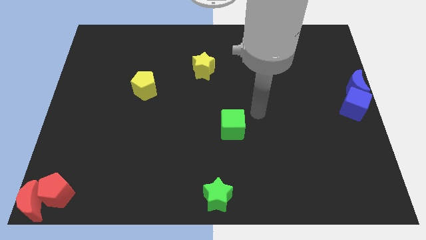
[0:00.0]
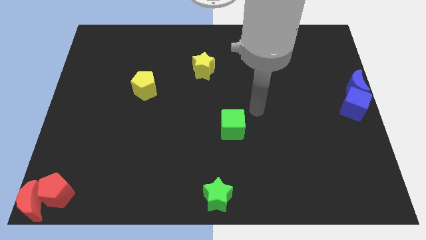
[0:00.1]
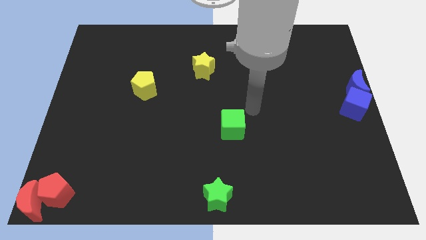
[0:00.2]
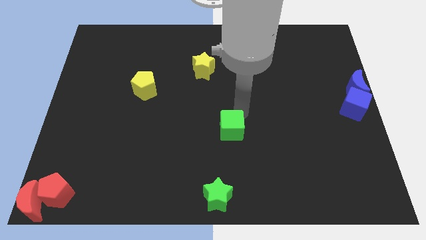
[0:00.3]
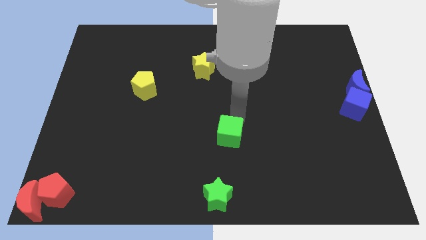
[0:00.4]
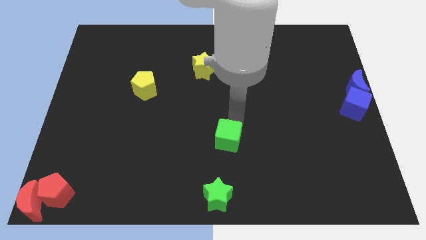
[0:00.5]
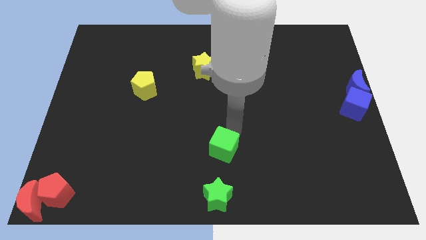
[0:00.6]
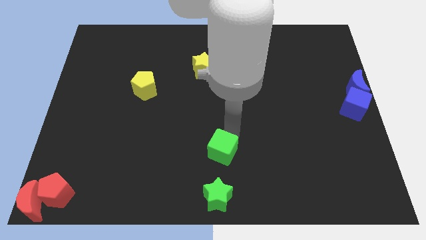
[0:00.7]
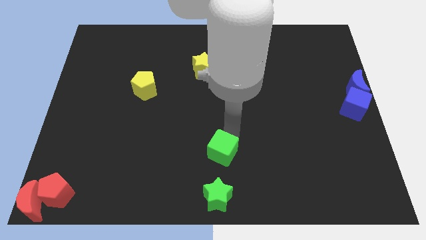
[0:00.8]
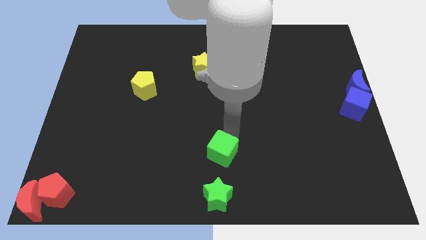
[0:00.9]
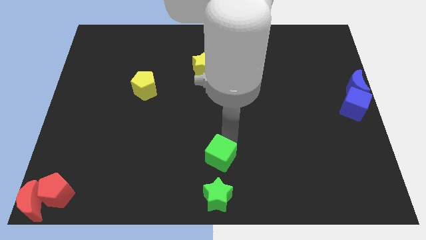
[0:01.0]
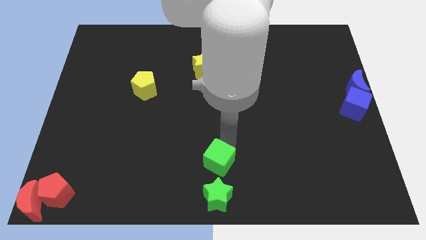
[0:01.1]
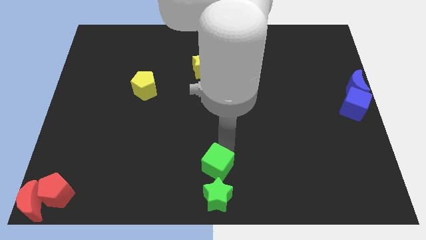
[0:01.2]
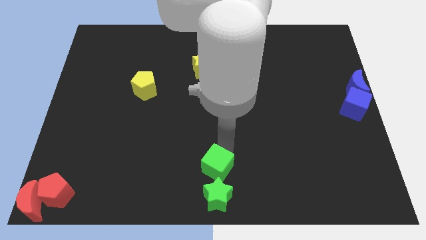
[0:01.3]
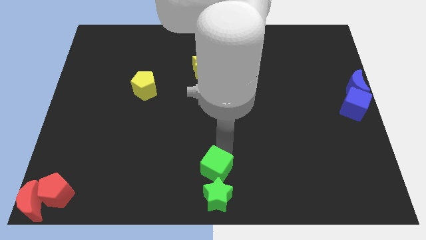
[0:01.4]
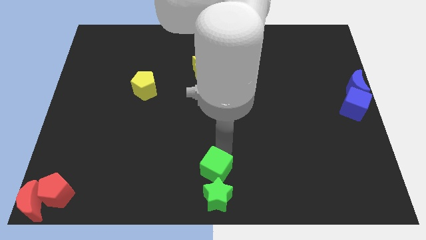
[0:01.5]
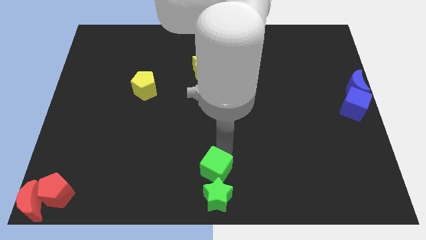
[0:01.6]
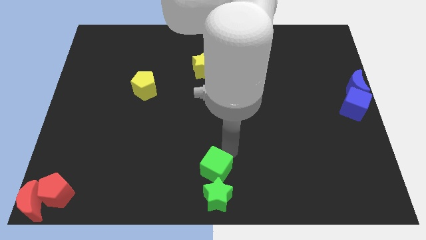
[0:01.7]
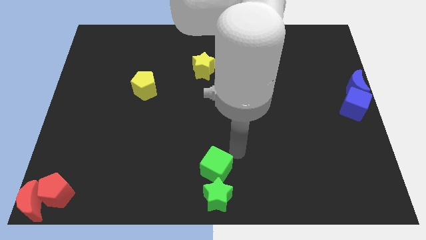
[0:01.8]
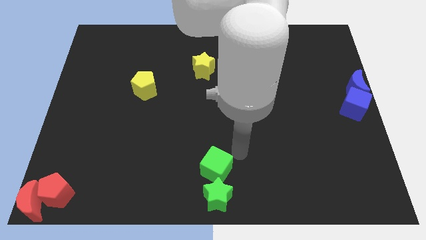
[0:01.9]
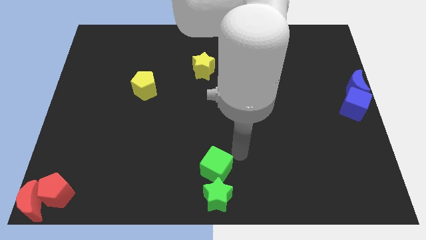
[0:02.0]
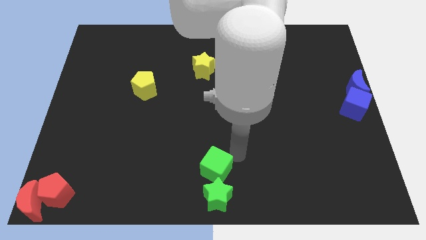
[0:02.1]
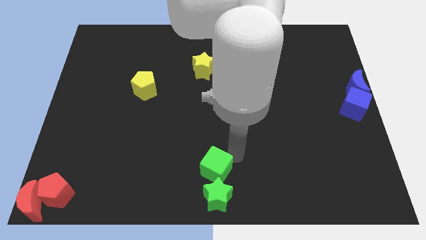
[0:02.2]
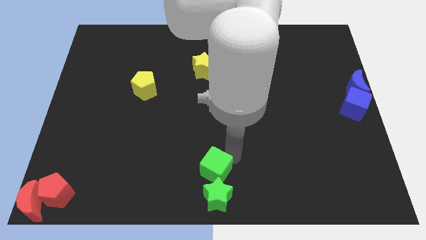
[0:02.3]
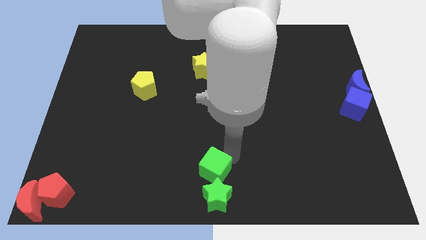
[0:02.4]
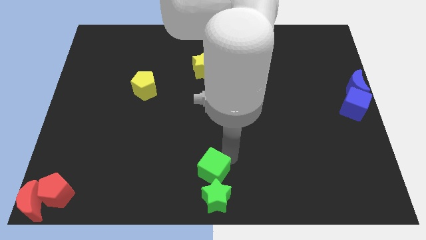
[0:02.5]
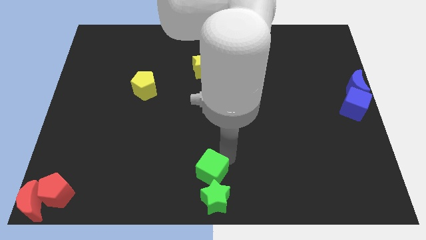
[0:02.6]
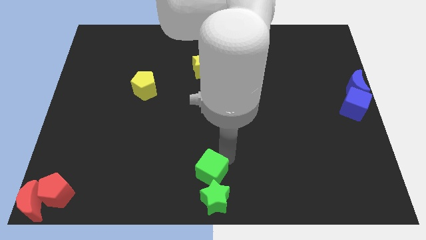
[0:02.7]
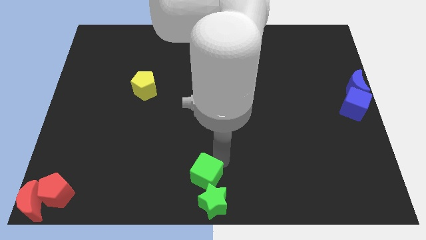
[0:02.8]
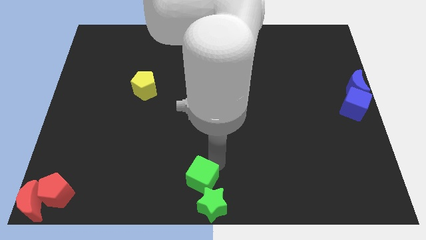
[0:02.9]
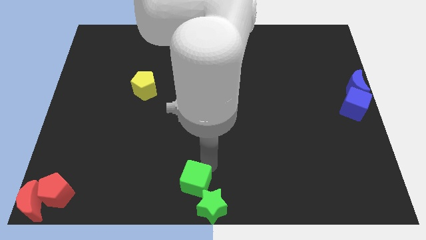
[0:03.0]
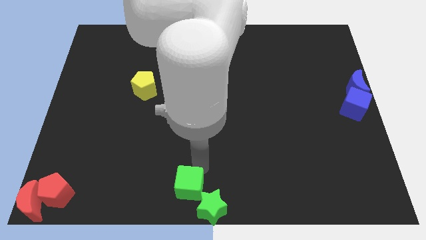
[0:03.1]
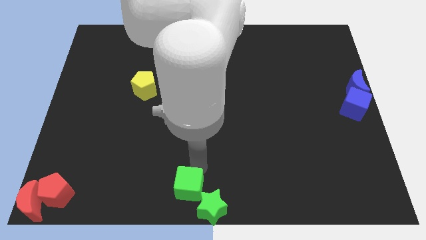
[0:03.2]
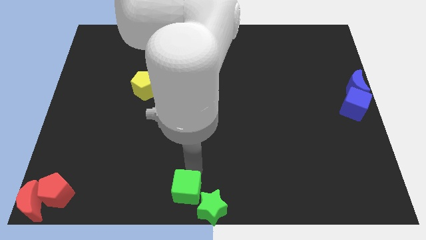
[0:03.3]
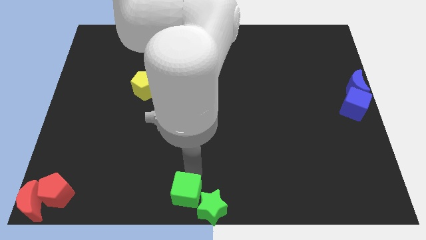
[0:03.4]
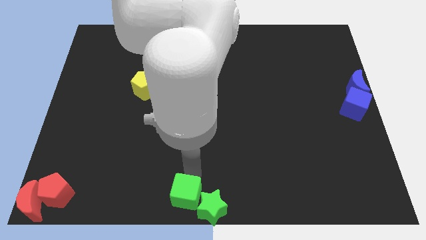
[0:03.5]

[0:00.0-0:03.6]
move green cube towards green star

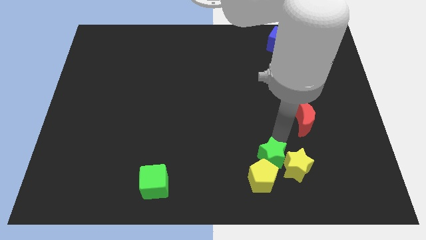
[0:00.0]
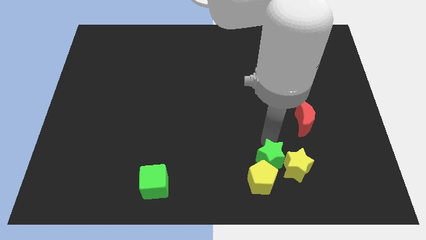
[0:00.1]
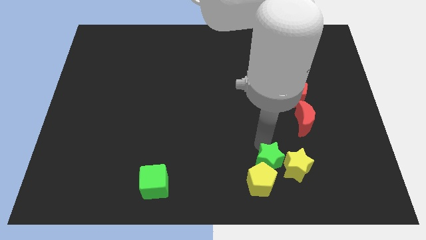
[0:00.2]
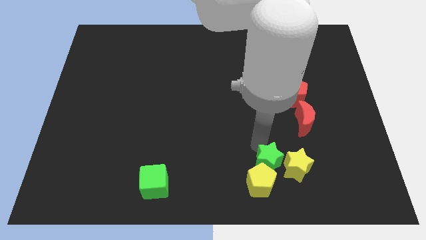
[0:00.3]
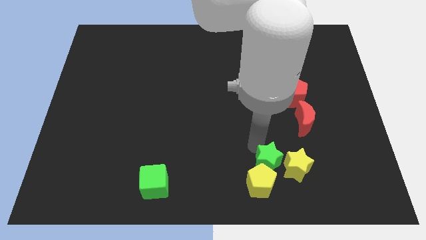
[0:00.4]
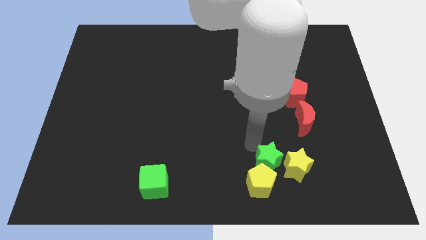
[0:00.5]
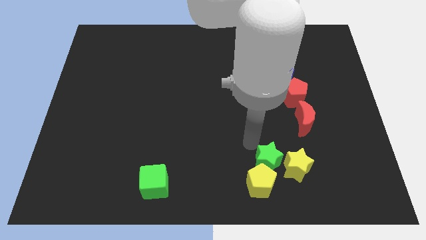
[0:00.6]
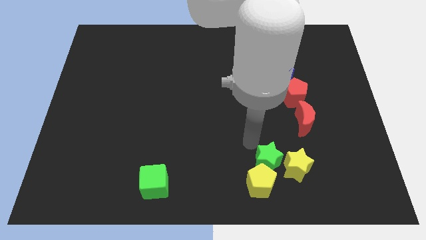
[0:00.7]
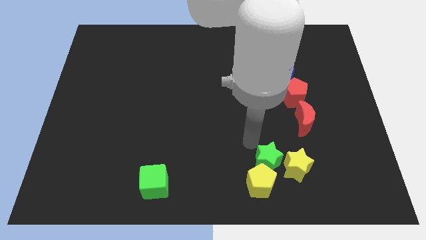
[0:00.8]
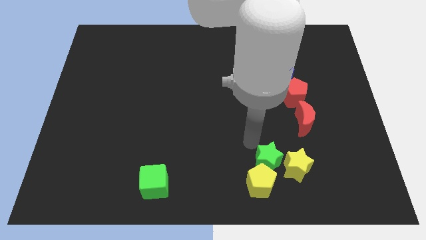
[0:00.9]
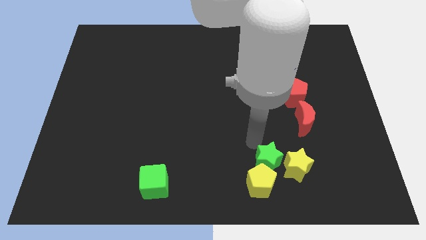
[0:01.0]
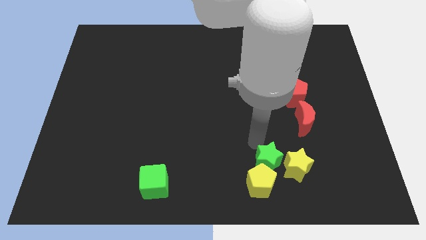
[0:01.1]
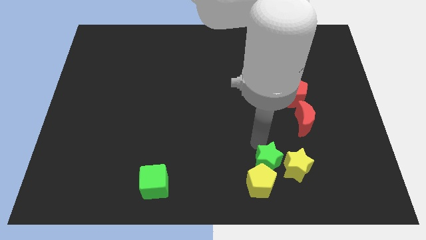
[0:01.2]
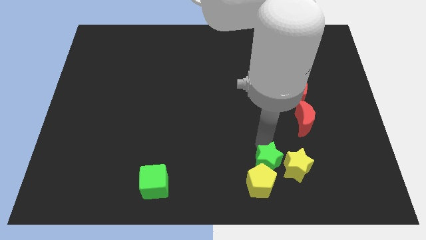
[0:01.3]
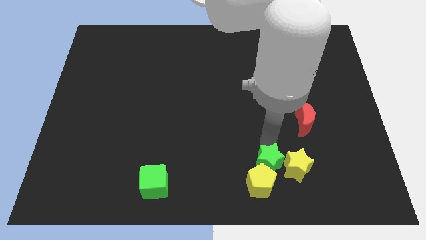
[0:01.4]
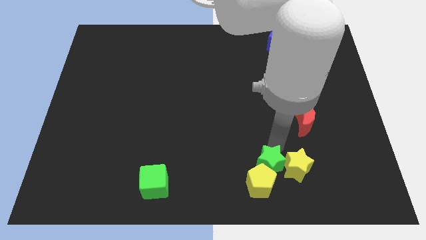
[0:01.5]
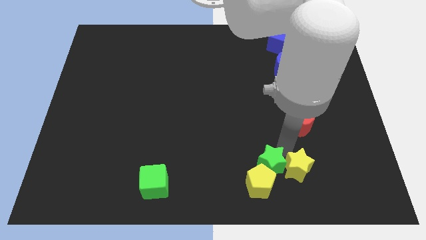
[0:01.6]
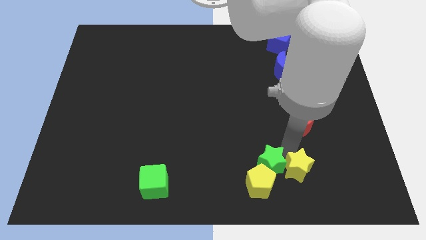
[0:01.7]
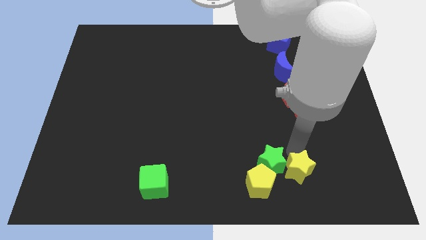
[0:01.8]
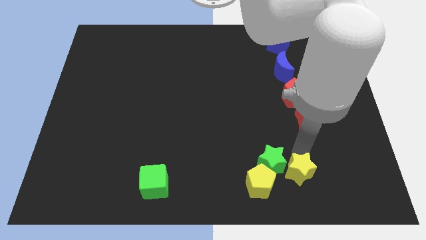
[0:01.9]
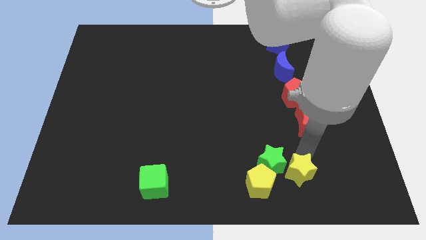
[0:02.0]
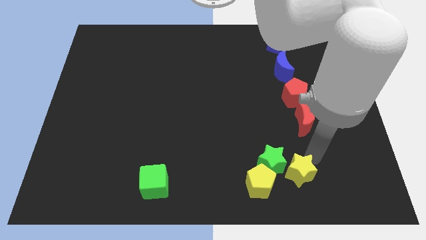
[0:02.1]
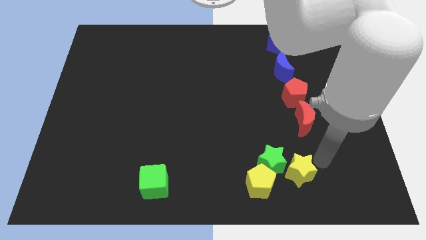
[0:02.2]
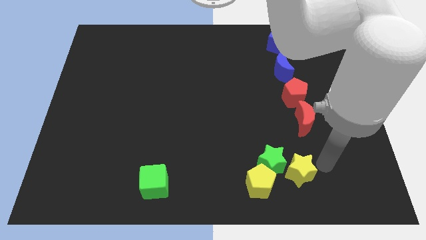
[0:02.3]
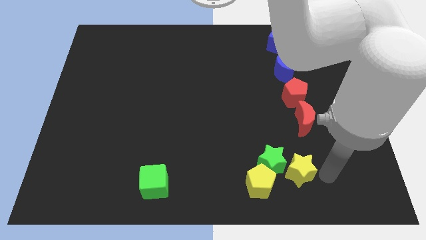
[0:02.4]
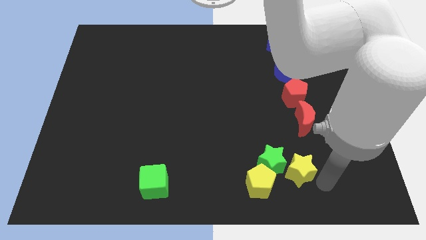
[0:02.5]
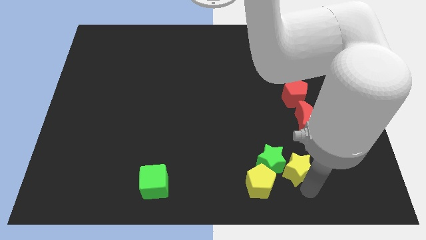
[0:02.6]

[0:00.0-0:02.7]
push the green star and yellow pentagon slightly downwards

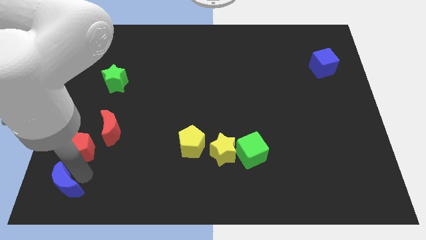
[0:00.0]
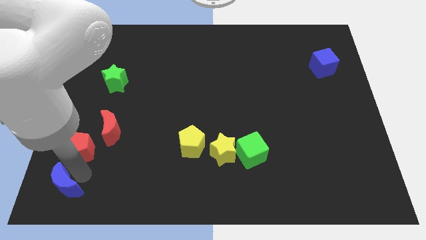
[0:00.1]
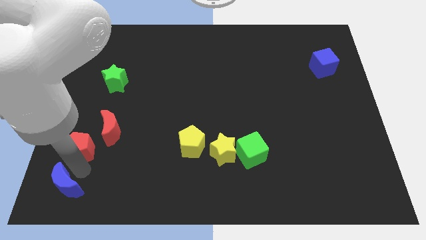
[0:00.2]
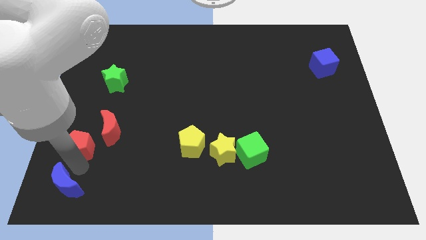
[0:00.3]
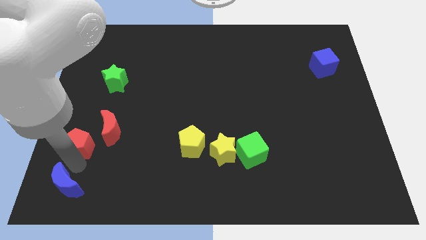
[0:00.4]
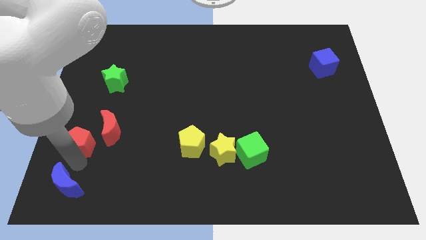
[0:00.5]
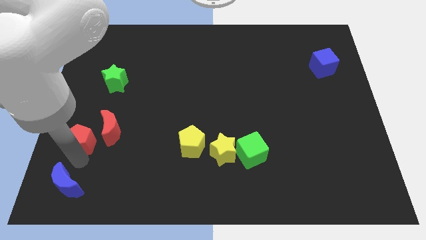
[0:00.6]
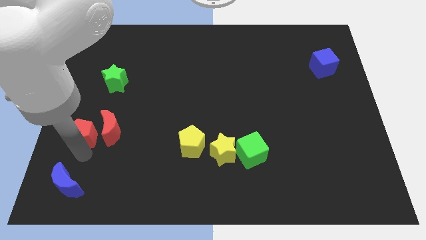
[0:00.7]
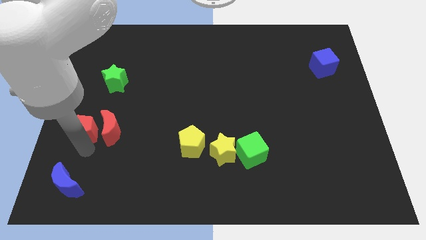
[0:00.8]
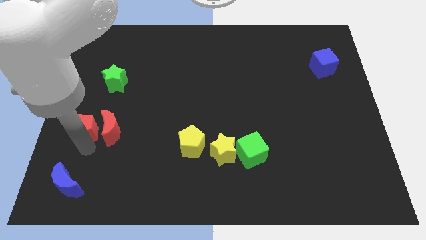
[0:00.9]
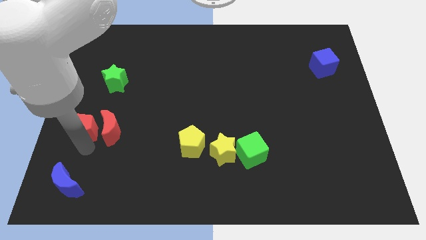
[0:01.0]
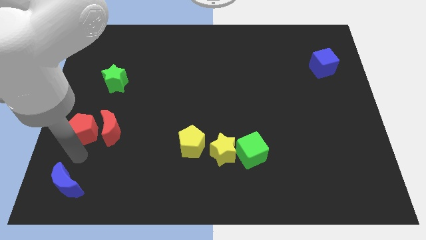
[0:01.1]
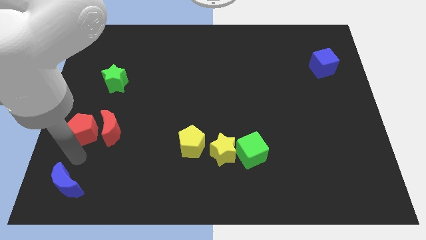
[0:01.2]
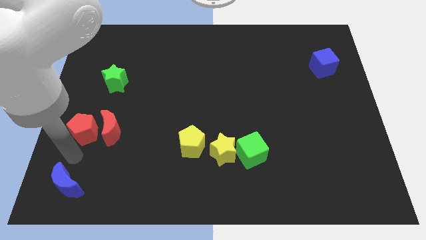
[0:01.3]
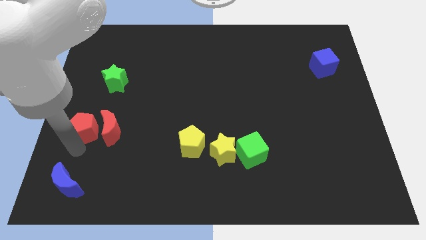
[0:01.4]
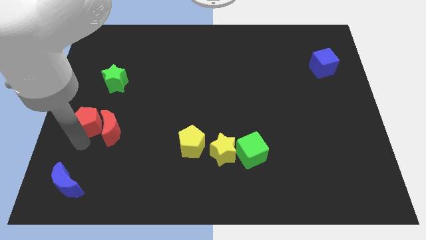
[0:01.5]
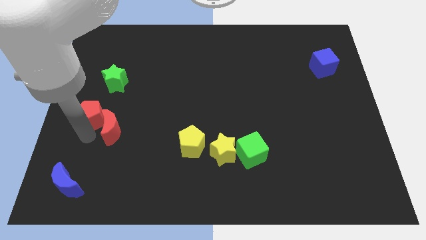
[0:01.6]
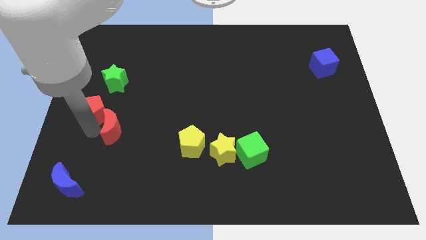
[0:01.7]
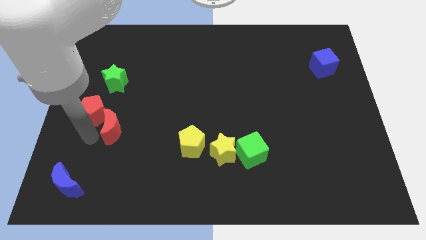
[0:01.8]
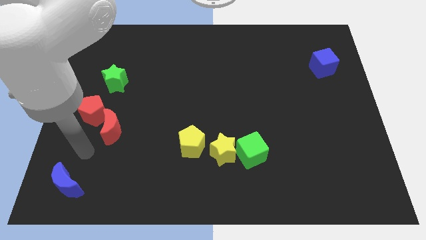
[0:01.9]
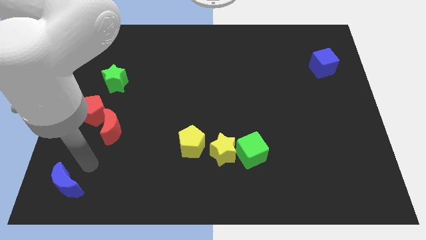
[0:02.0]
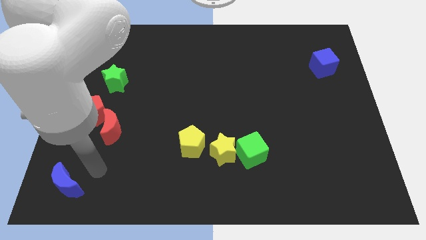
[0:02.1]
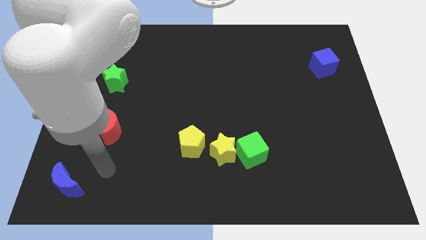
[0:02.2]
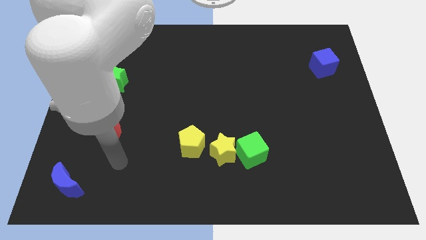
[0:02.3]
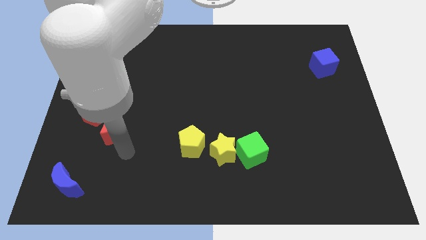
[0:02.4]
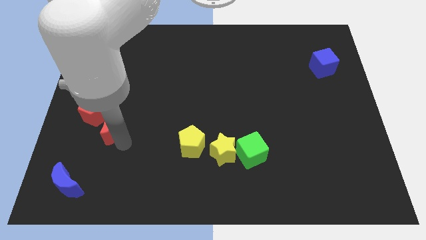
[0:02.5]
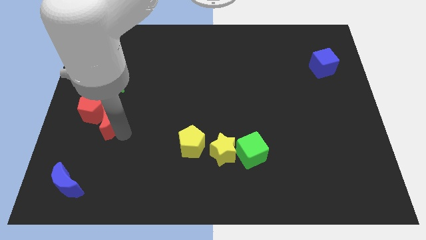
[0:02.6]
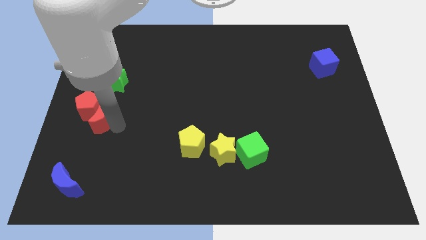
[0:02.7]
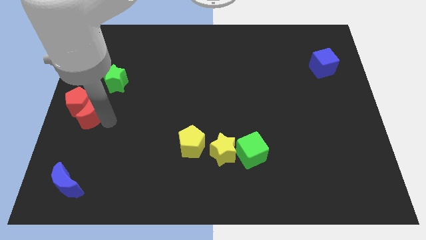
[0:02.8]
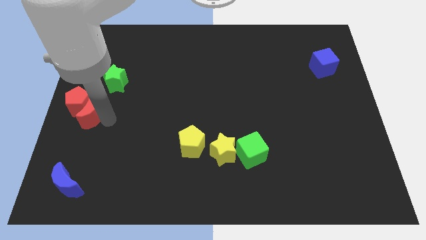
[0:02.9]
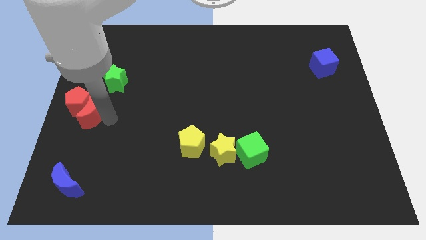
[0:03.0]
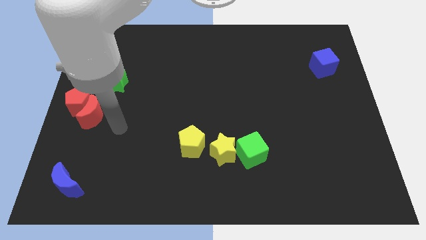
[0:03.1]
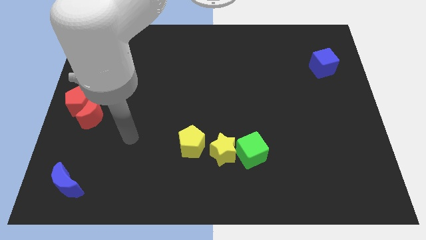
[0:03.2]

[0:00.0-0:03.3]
push the red blocks to the center left side of the board
